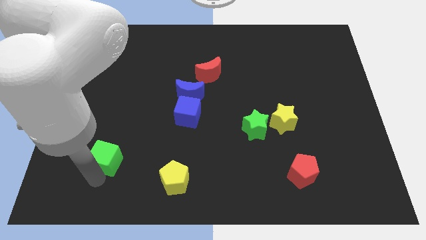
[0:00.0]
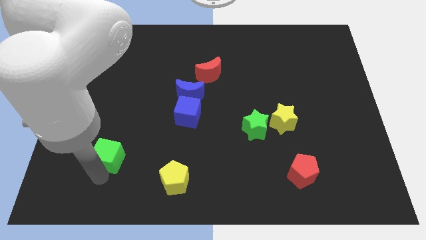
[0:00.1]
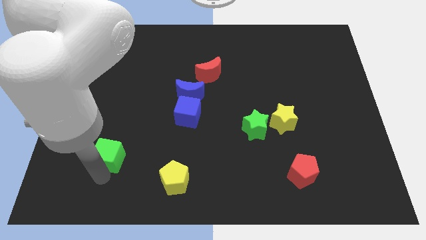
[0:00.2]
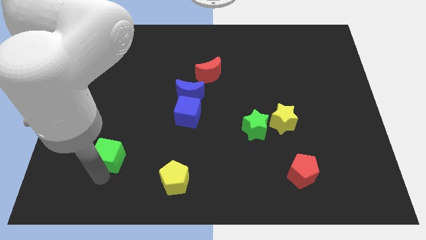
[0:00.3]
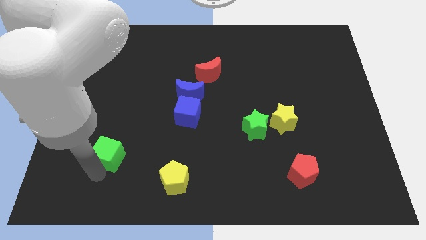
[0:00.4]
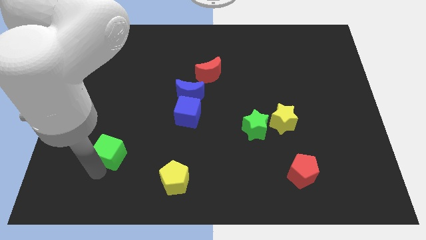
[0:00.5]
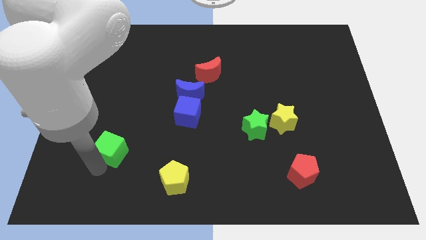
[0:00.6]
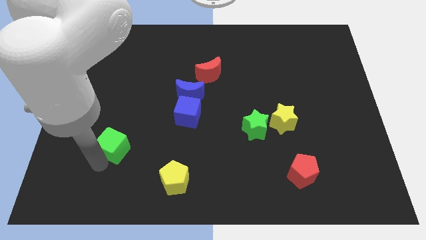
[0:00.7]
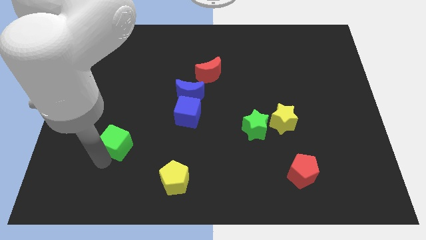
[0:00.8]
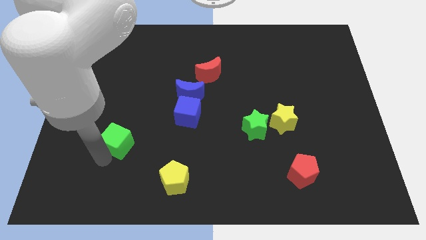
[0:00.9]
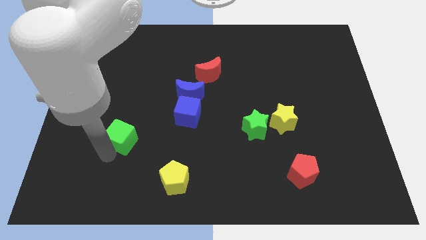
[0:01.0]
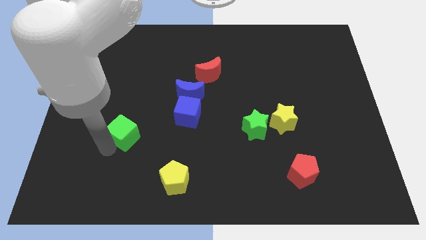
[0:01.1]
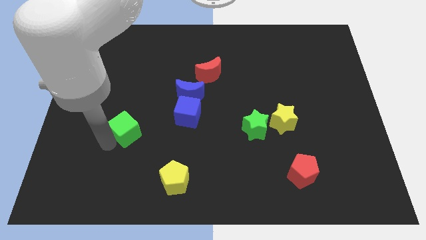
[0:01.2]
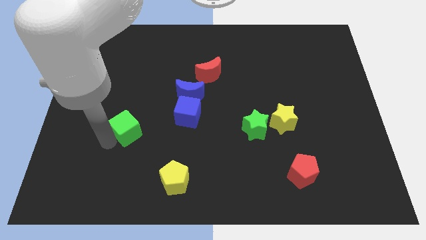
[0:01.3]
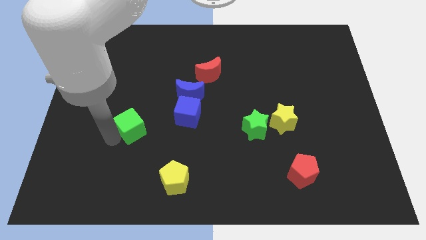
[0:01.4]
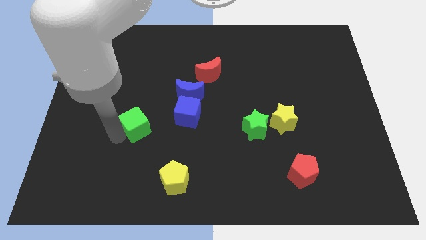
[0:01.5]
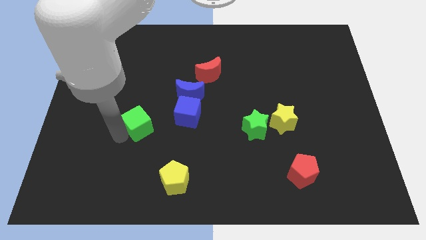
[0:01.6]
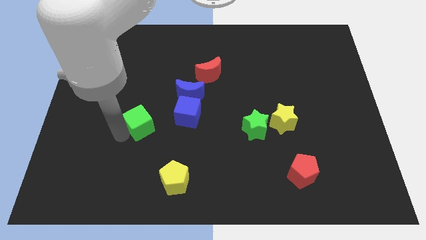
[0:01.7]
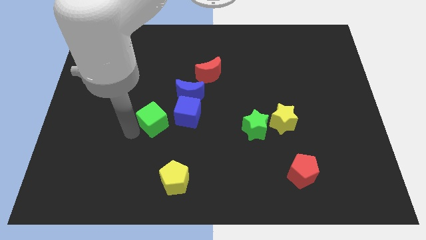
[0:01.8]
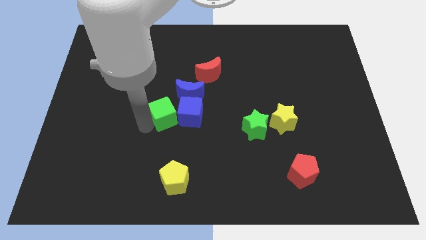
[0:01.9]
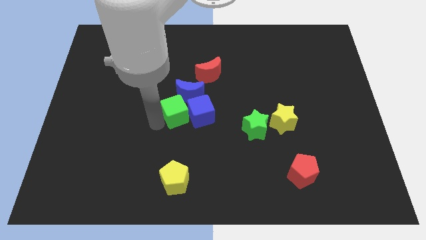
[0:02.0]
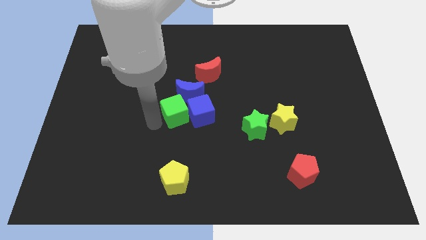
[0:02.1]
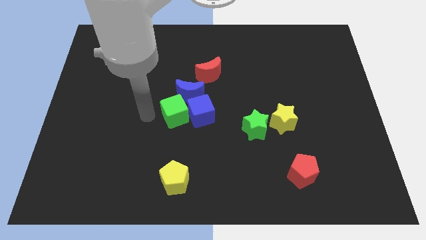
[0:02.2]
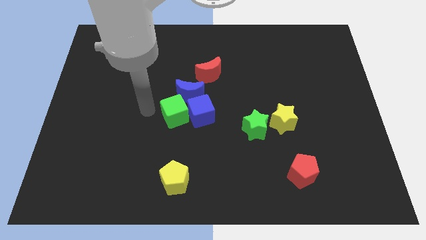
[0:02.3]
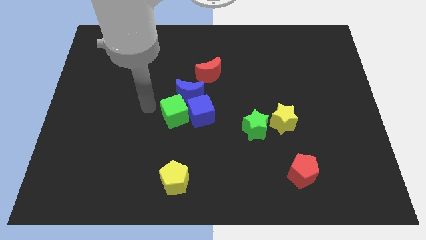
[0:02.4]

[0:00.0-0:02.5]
move the green cube into the blue cube

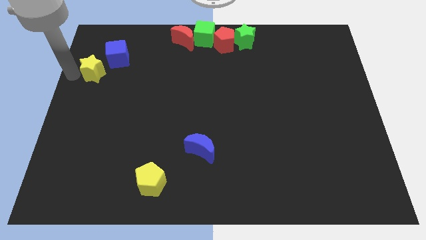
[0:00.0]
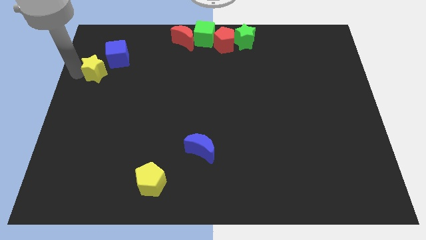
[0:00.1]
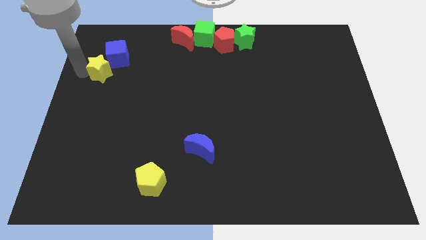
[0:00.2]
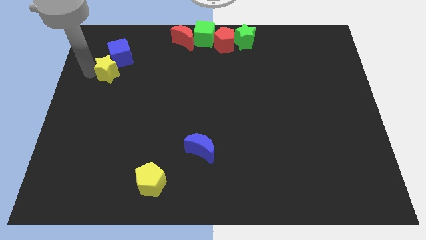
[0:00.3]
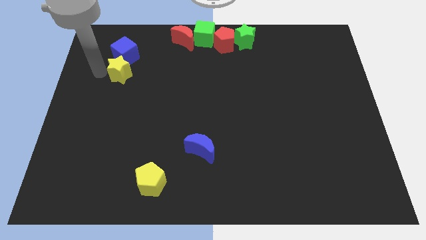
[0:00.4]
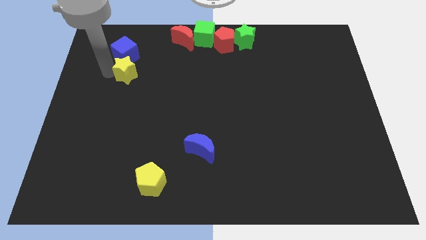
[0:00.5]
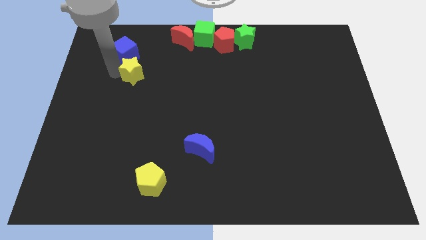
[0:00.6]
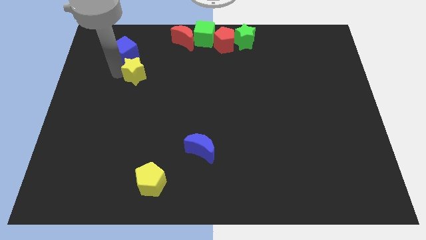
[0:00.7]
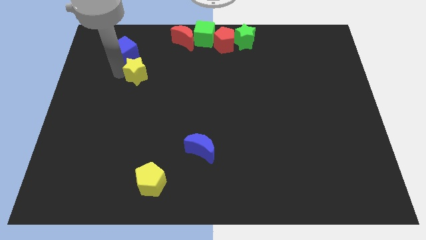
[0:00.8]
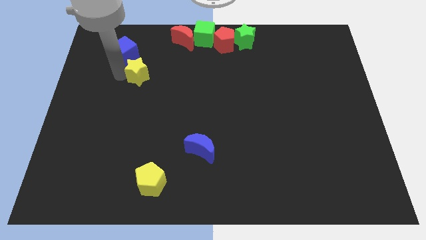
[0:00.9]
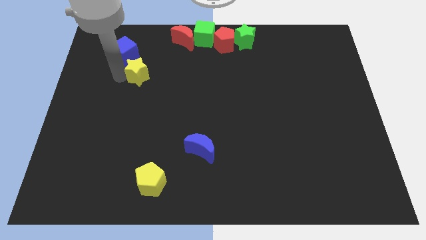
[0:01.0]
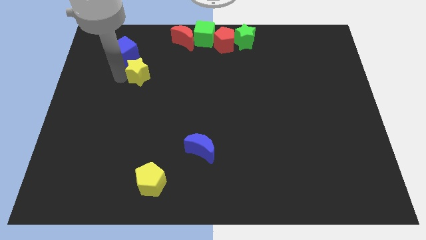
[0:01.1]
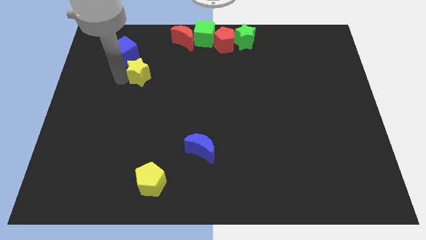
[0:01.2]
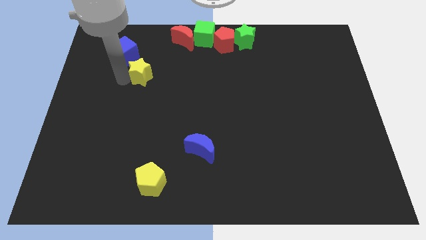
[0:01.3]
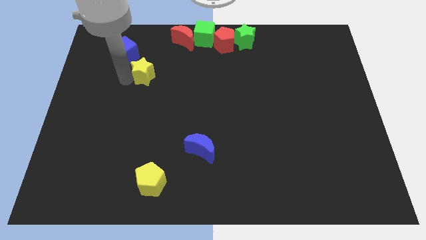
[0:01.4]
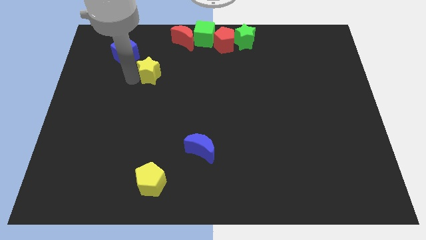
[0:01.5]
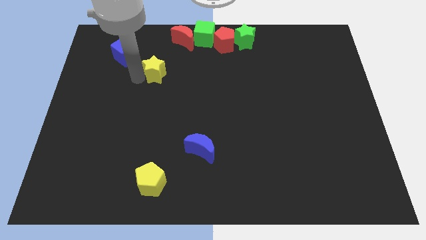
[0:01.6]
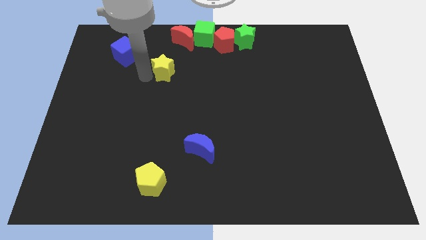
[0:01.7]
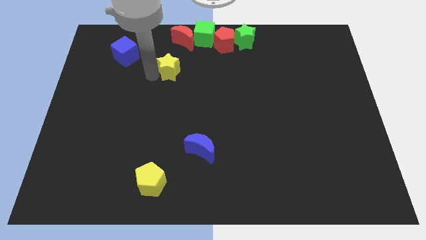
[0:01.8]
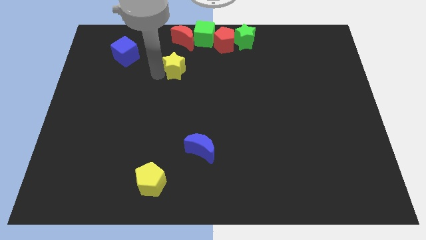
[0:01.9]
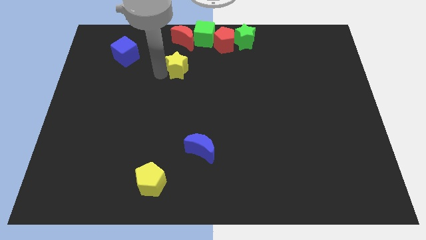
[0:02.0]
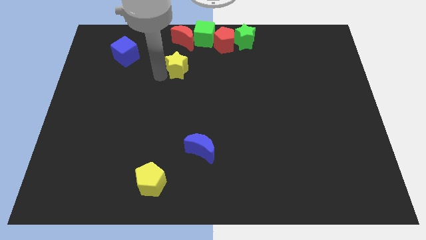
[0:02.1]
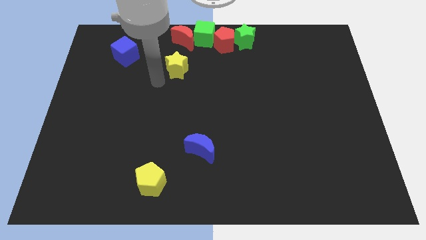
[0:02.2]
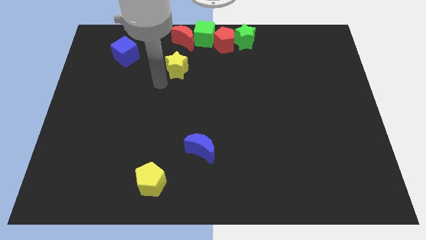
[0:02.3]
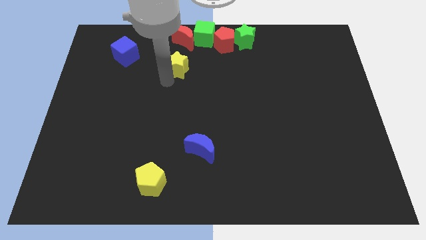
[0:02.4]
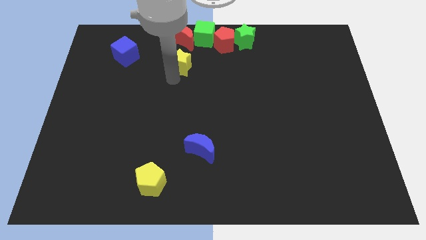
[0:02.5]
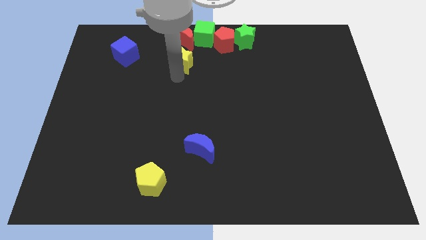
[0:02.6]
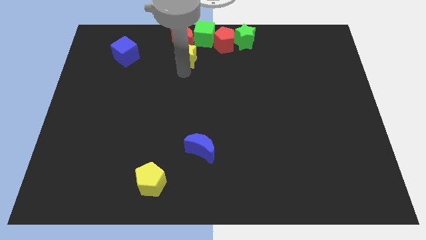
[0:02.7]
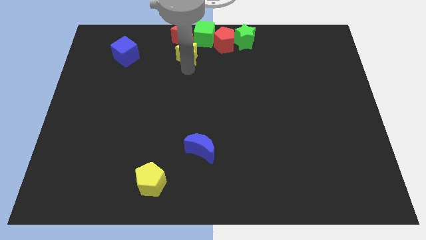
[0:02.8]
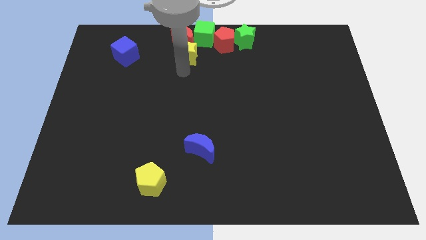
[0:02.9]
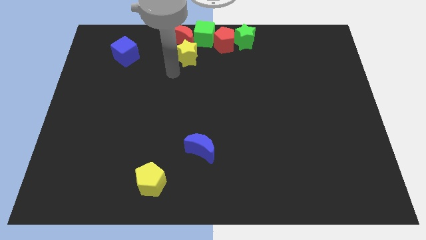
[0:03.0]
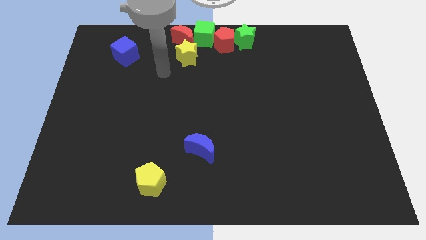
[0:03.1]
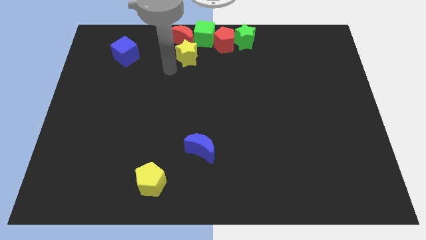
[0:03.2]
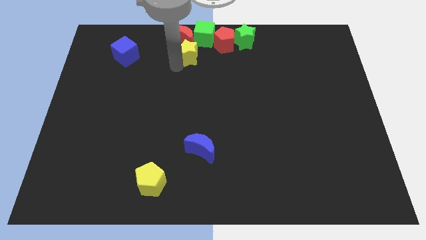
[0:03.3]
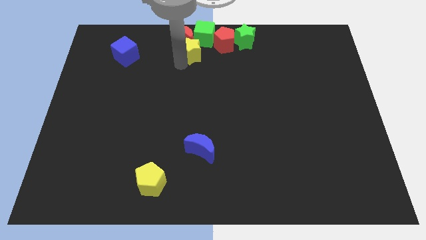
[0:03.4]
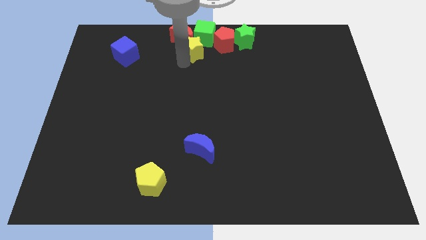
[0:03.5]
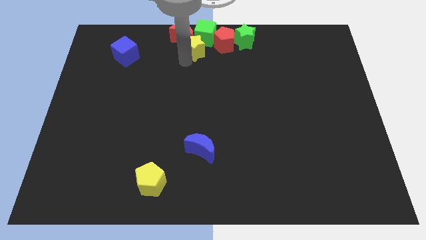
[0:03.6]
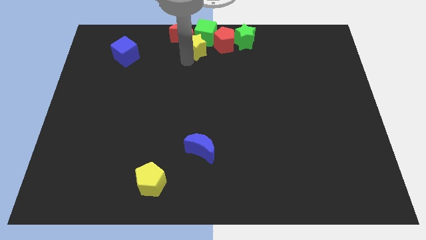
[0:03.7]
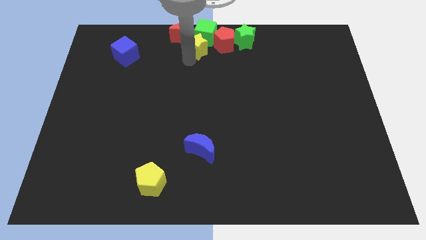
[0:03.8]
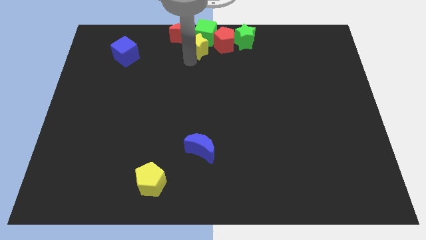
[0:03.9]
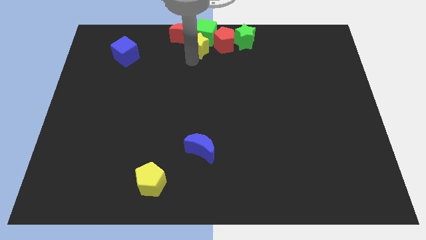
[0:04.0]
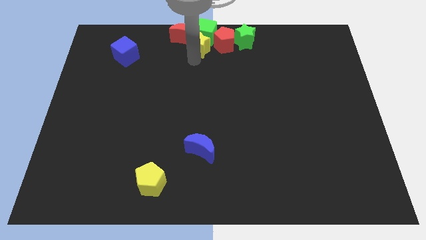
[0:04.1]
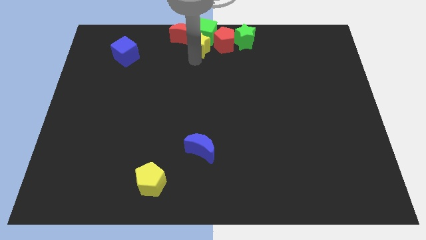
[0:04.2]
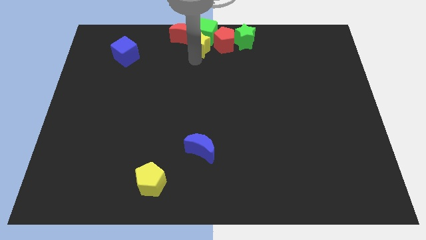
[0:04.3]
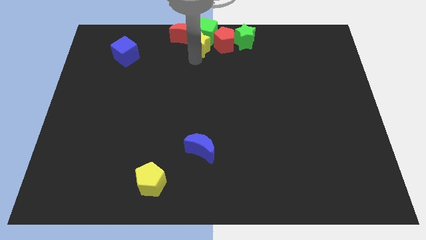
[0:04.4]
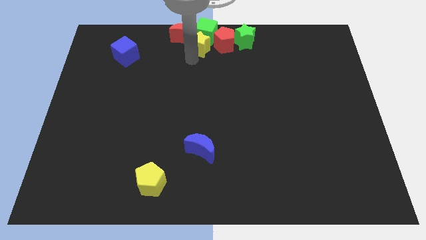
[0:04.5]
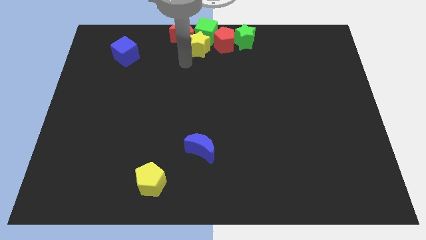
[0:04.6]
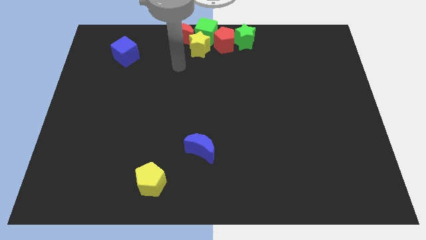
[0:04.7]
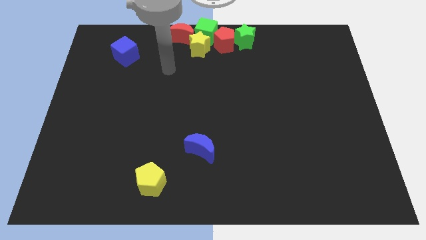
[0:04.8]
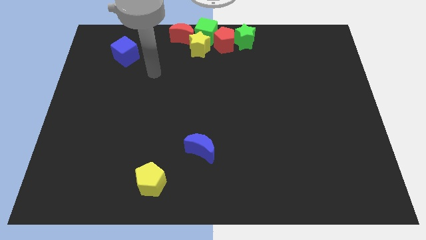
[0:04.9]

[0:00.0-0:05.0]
push the yellow star to the bottom side of the green cube

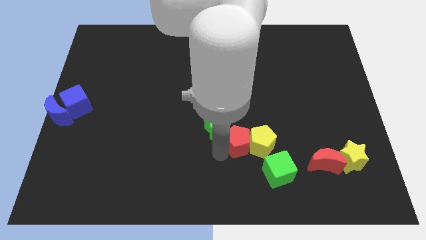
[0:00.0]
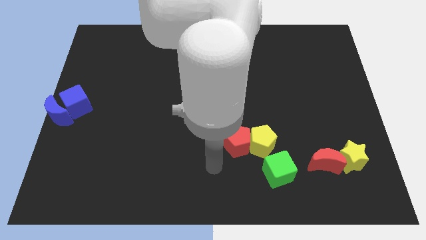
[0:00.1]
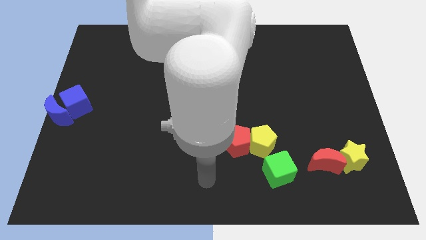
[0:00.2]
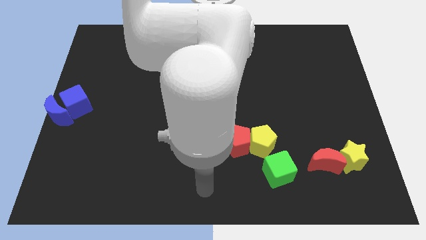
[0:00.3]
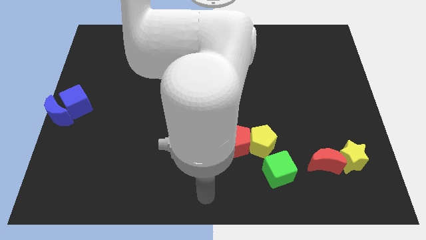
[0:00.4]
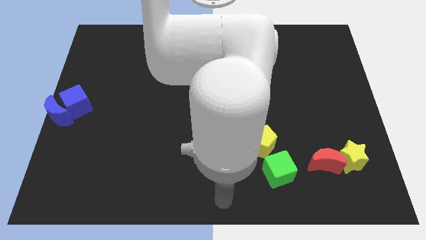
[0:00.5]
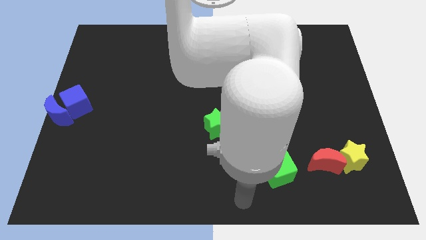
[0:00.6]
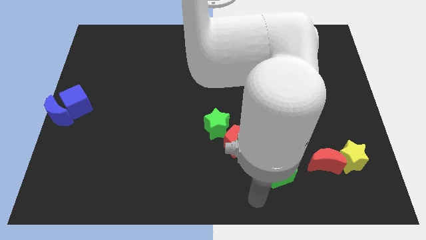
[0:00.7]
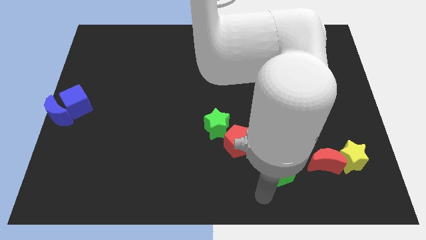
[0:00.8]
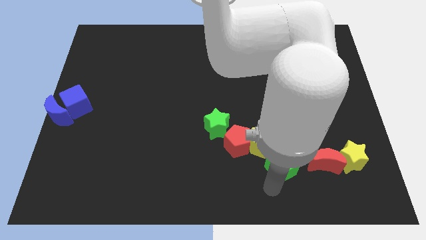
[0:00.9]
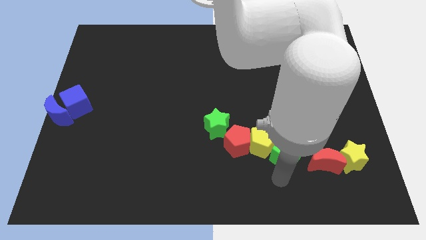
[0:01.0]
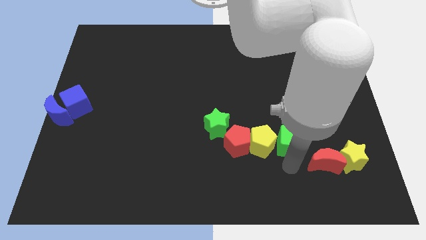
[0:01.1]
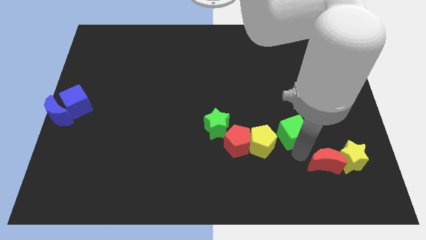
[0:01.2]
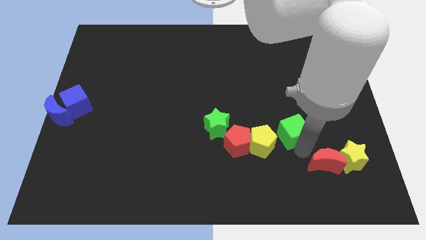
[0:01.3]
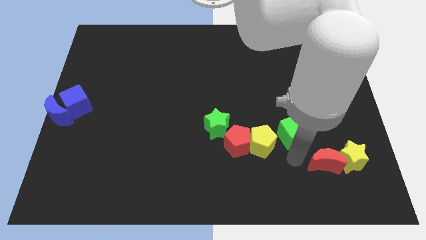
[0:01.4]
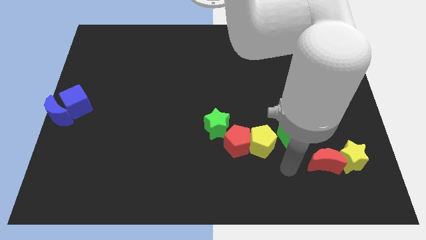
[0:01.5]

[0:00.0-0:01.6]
move the green cube to the left of the yellow pentagon
